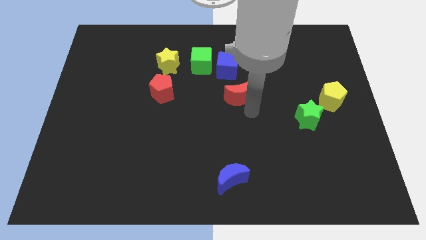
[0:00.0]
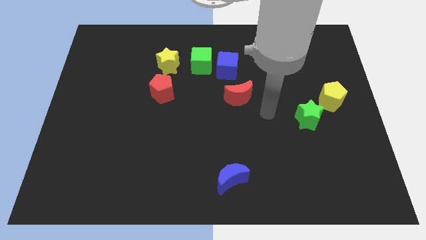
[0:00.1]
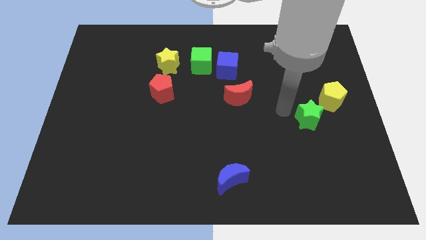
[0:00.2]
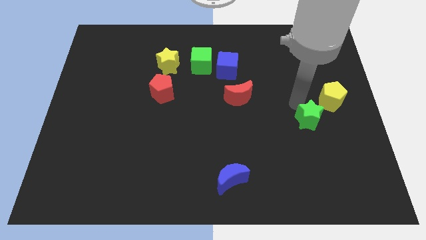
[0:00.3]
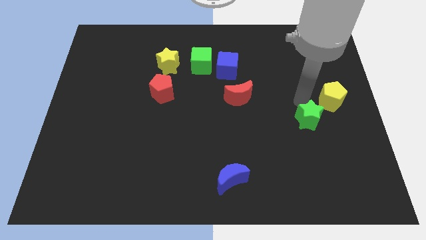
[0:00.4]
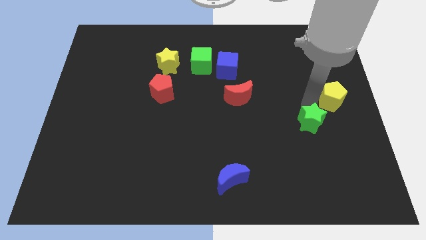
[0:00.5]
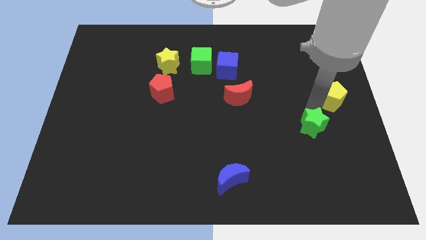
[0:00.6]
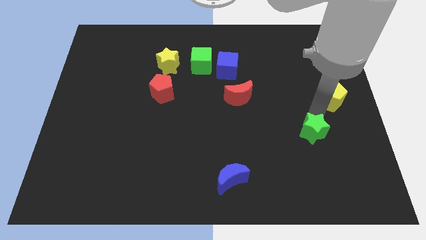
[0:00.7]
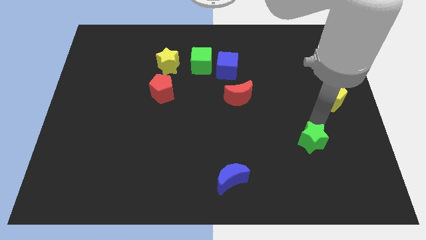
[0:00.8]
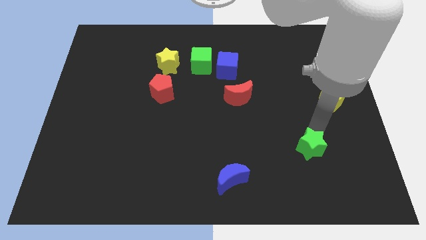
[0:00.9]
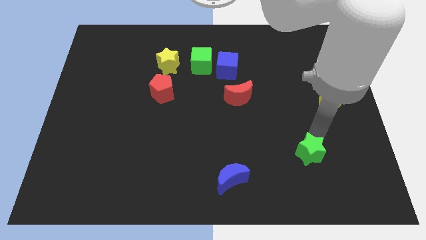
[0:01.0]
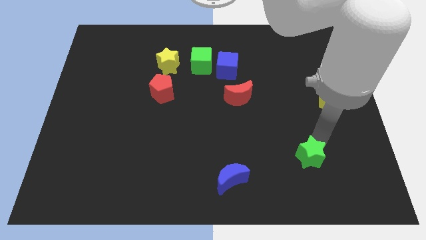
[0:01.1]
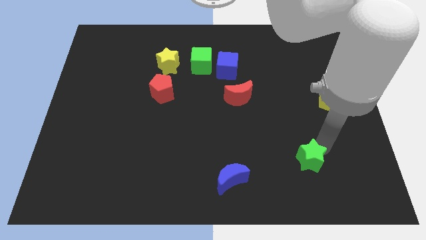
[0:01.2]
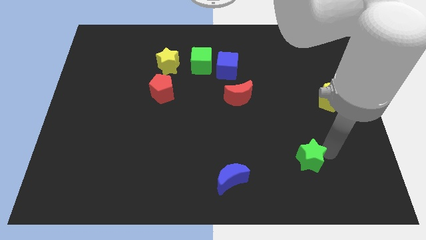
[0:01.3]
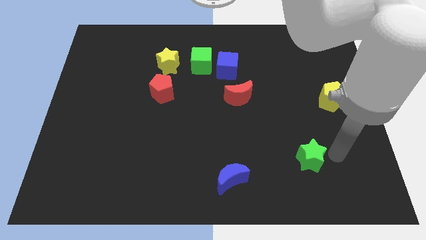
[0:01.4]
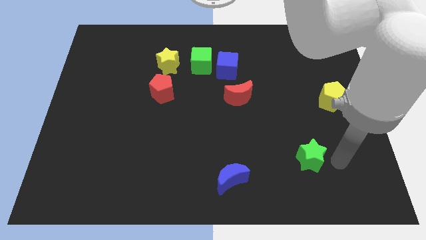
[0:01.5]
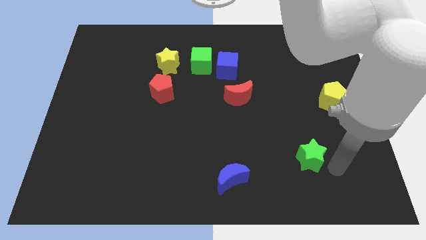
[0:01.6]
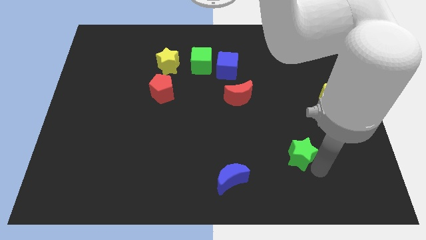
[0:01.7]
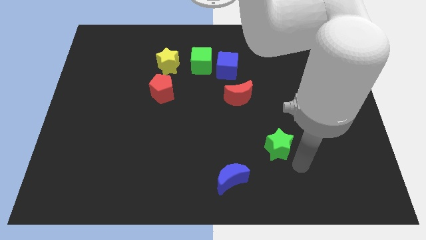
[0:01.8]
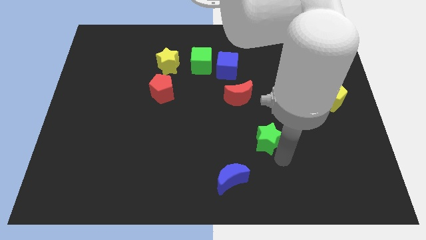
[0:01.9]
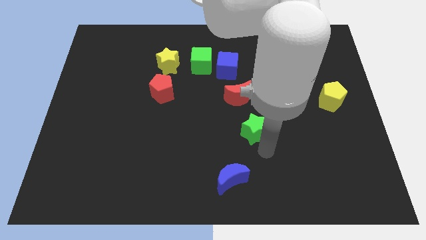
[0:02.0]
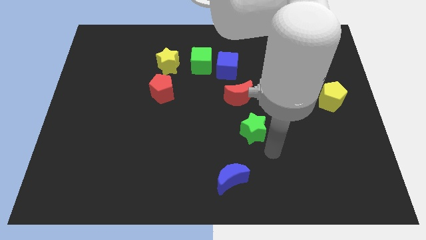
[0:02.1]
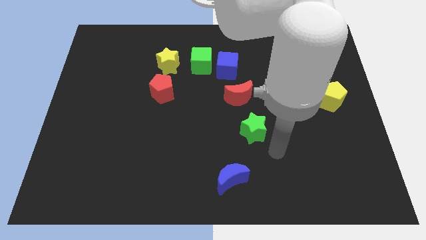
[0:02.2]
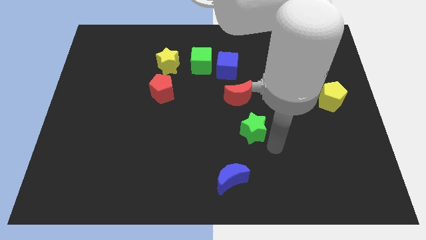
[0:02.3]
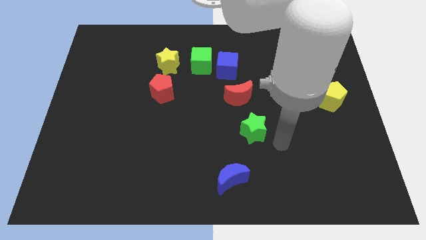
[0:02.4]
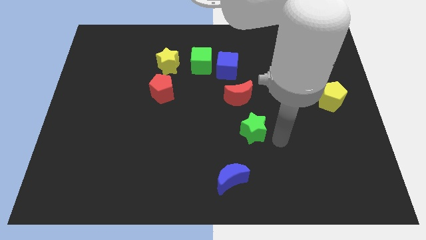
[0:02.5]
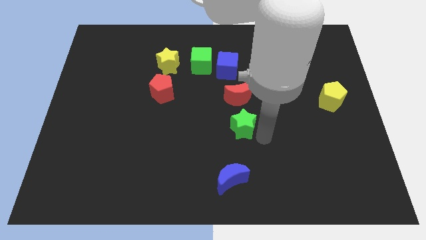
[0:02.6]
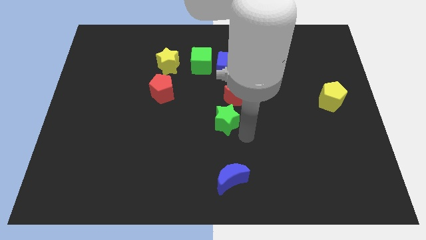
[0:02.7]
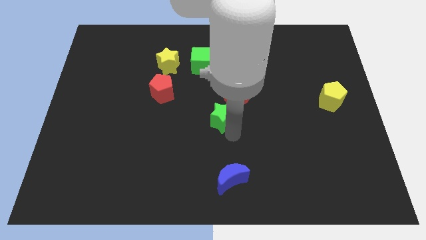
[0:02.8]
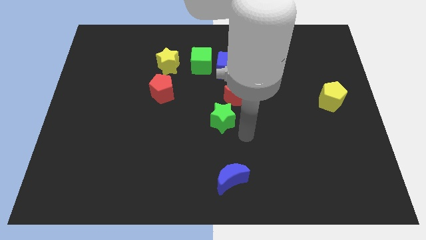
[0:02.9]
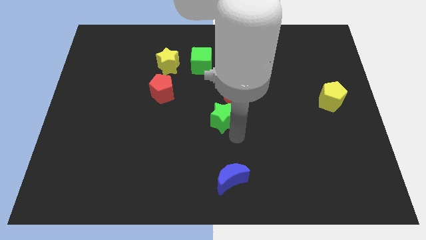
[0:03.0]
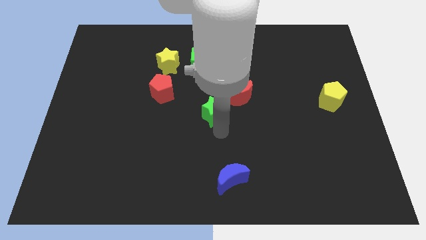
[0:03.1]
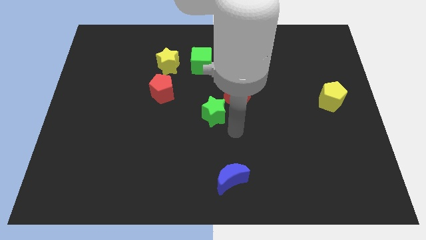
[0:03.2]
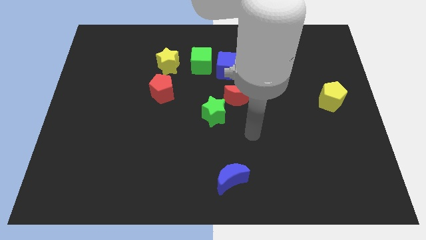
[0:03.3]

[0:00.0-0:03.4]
push the green star at the bottom left of the red crescent

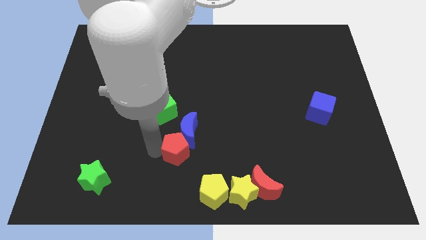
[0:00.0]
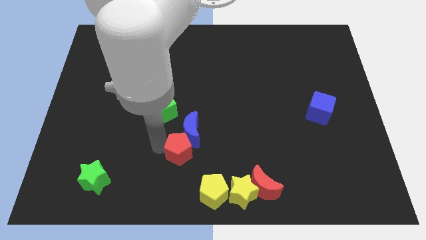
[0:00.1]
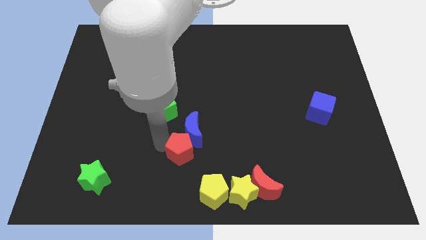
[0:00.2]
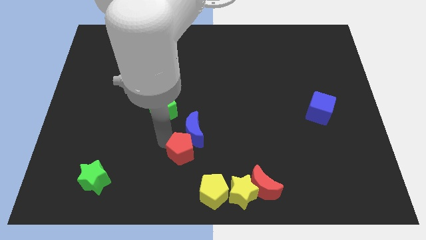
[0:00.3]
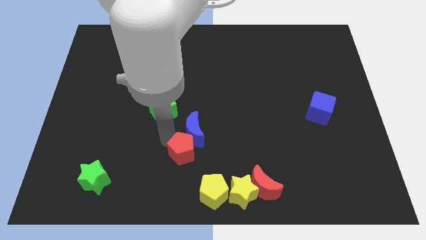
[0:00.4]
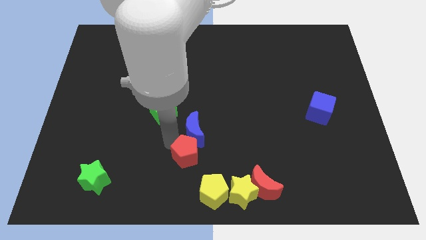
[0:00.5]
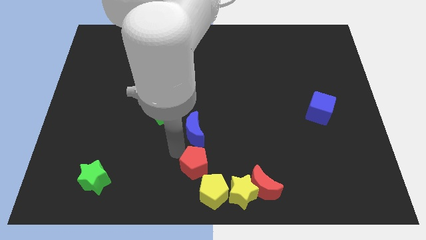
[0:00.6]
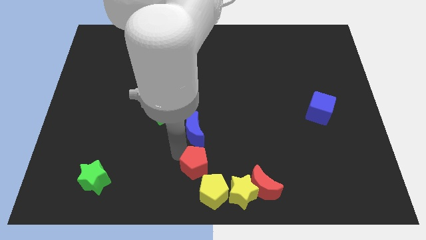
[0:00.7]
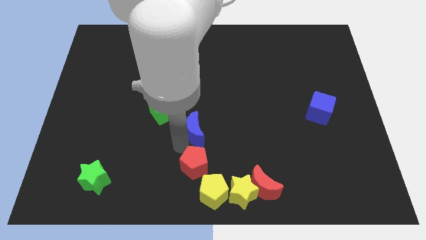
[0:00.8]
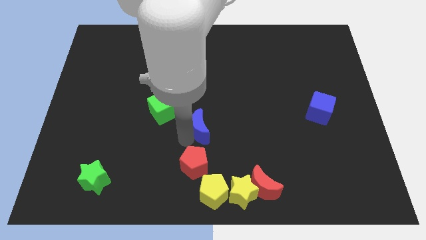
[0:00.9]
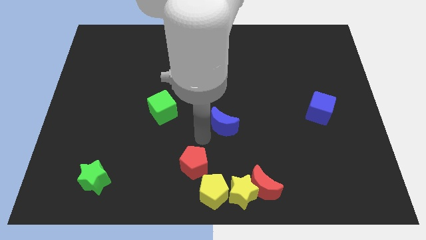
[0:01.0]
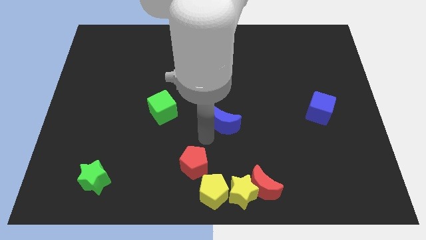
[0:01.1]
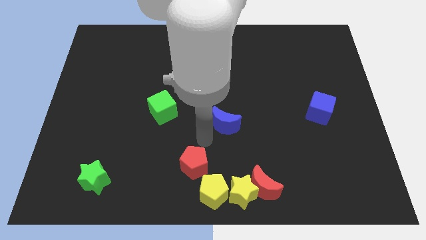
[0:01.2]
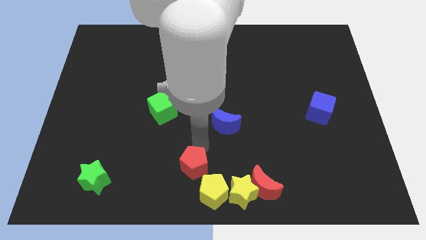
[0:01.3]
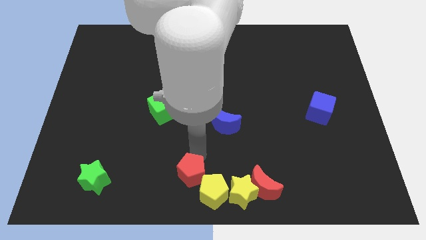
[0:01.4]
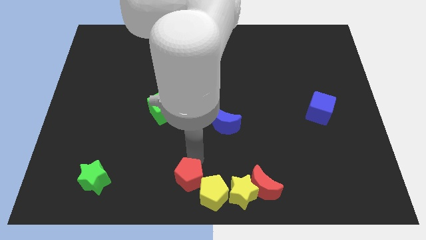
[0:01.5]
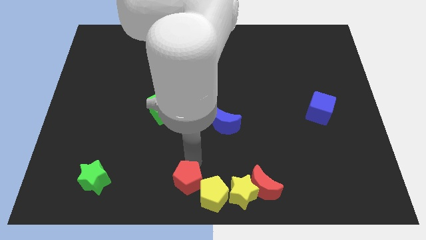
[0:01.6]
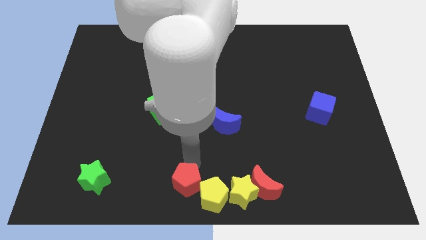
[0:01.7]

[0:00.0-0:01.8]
separate the red pentagon from the blue moon

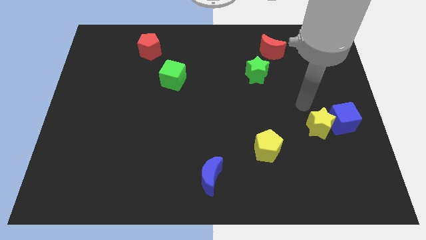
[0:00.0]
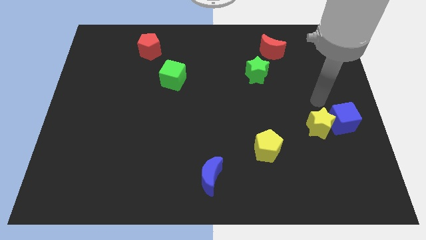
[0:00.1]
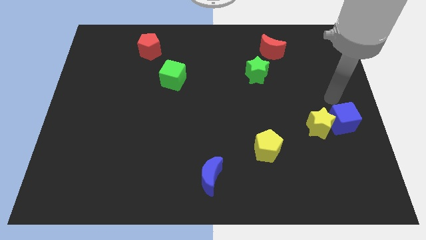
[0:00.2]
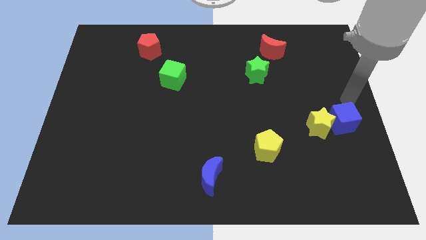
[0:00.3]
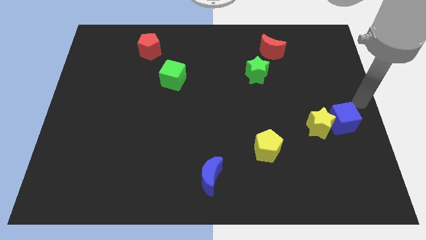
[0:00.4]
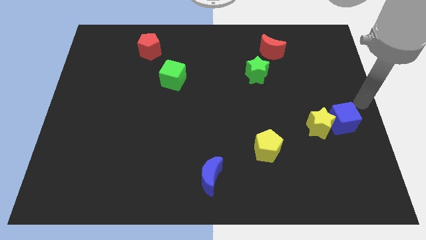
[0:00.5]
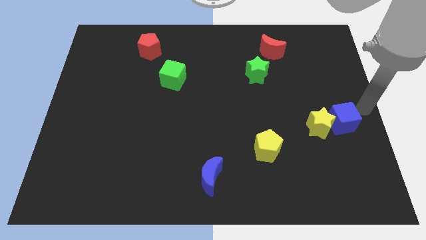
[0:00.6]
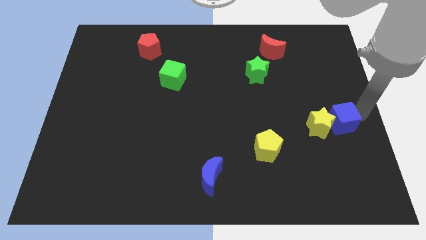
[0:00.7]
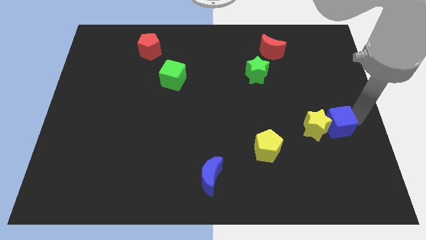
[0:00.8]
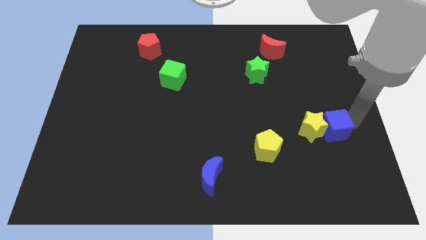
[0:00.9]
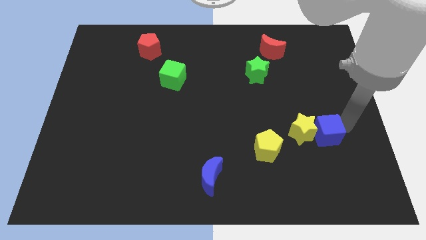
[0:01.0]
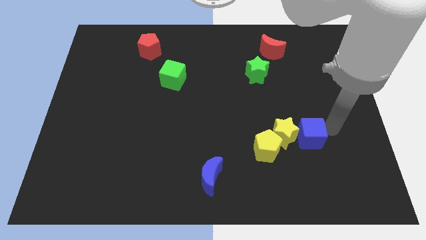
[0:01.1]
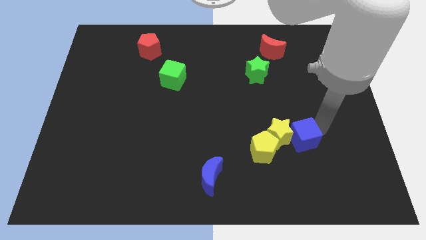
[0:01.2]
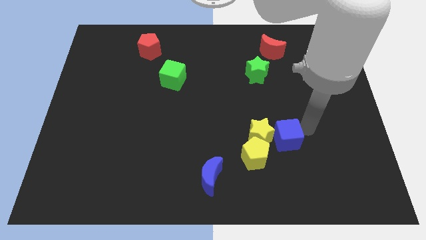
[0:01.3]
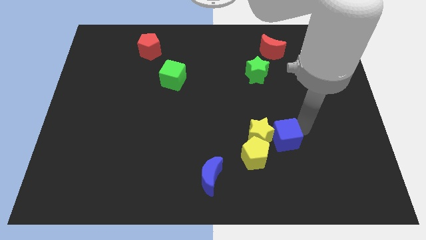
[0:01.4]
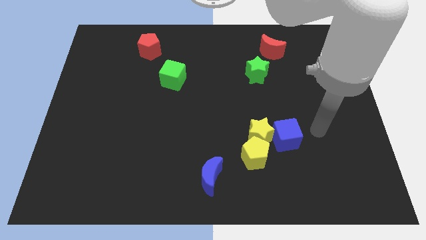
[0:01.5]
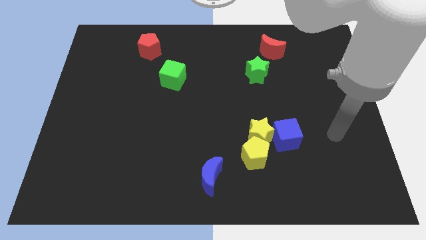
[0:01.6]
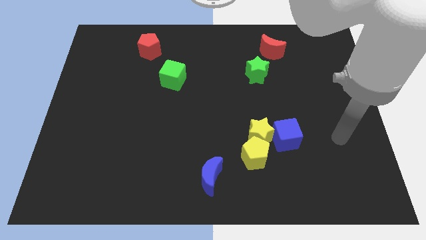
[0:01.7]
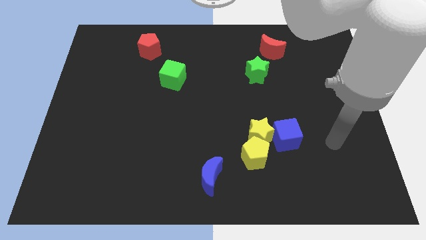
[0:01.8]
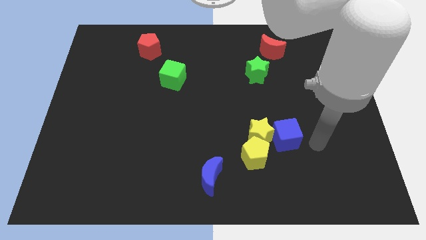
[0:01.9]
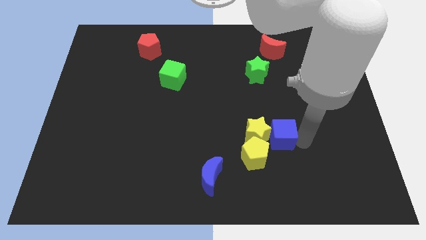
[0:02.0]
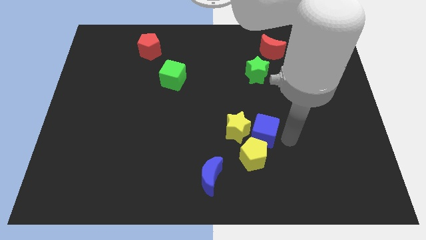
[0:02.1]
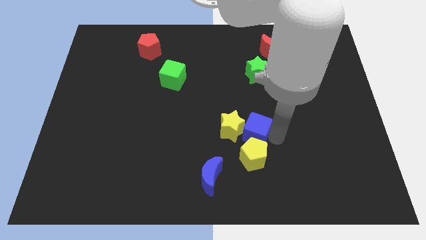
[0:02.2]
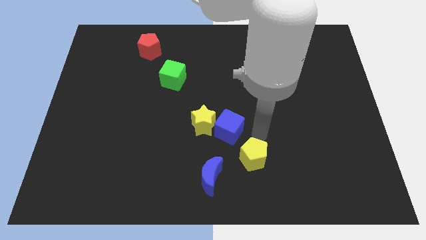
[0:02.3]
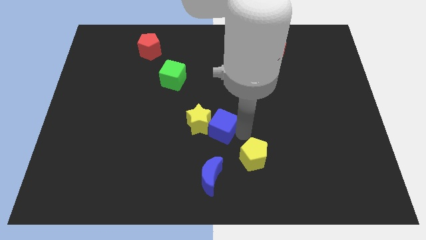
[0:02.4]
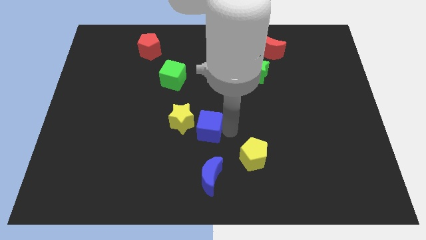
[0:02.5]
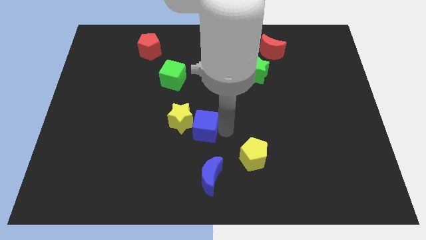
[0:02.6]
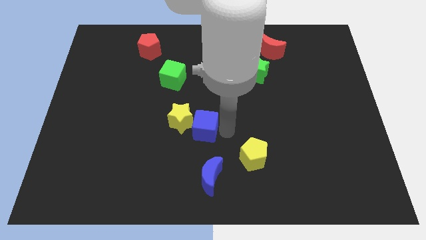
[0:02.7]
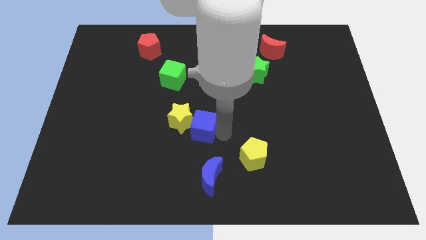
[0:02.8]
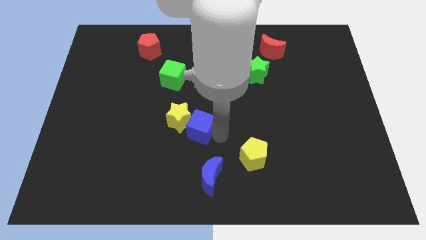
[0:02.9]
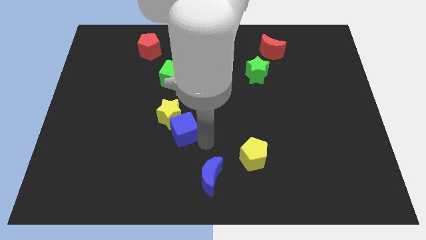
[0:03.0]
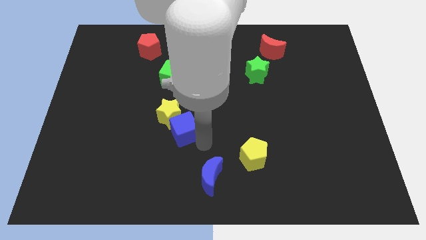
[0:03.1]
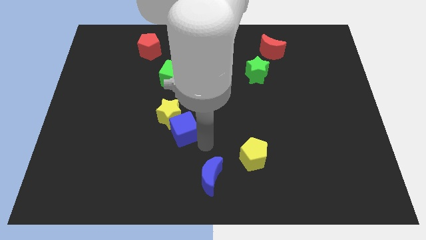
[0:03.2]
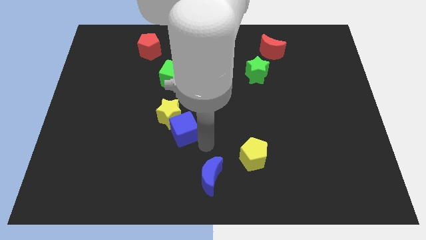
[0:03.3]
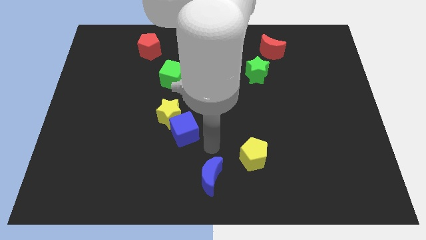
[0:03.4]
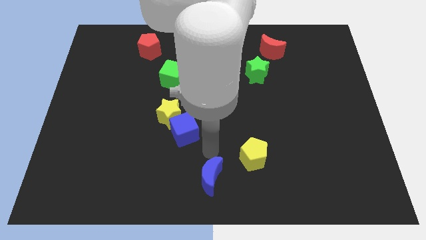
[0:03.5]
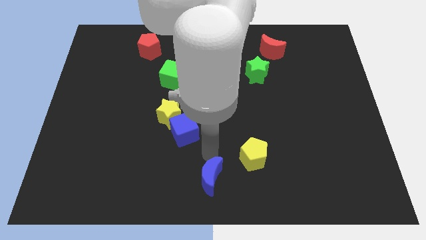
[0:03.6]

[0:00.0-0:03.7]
push blue cube and yellow star towards the left of the board
